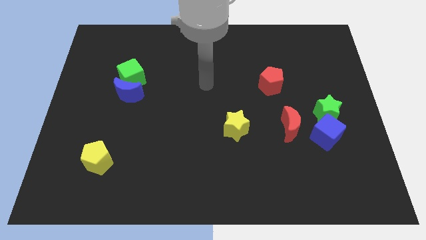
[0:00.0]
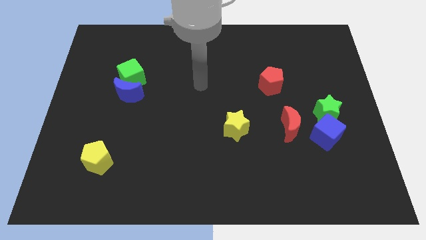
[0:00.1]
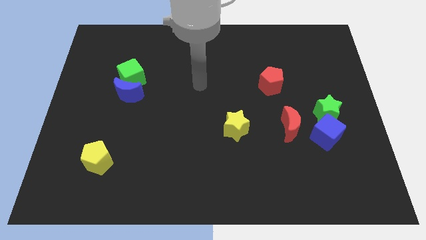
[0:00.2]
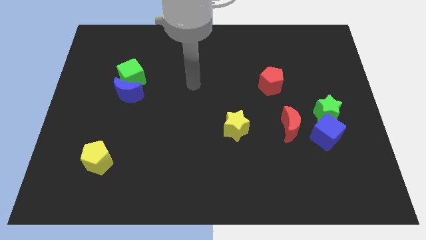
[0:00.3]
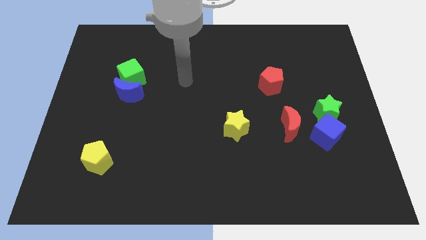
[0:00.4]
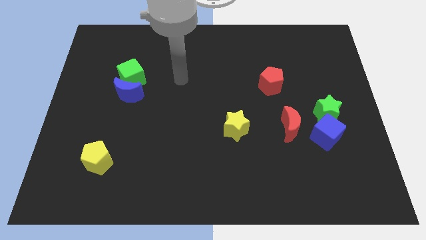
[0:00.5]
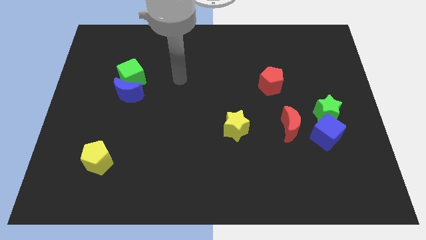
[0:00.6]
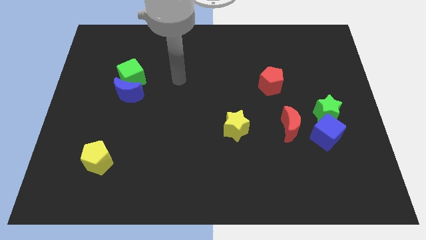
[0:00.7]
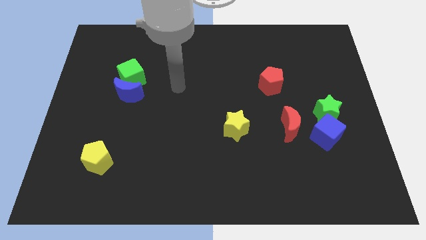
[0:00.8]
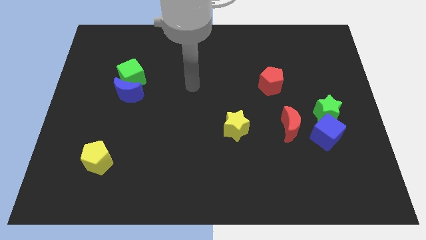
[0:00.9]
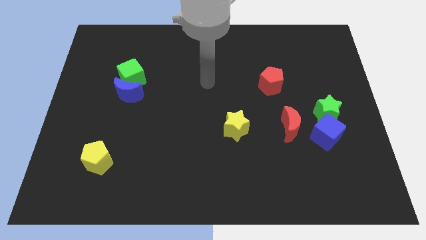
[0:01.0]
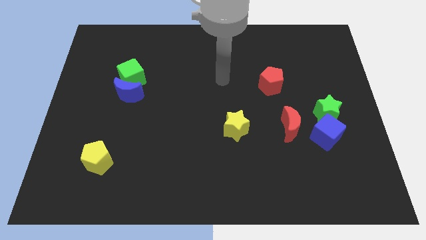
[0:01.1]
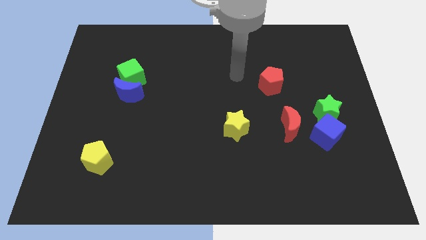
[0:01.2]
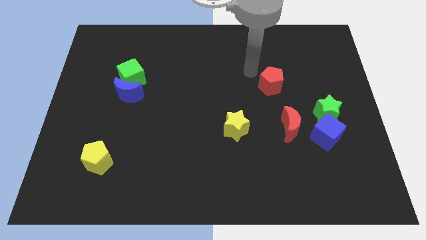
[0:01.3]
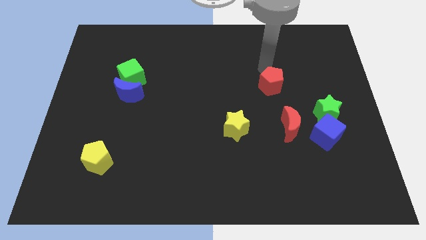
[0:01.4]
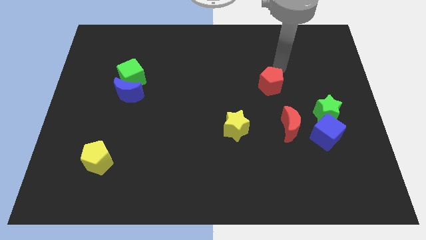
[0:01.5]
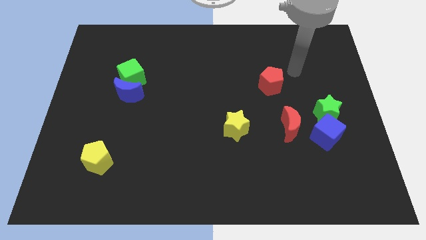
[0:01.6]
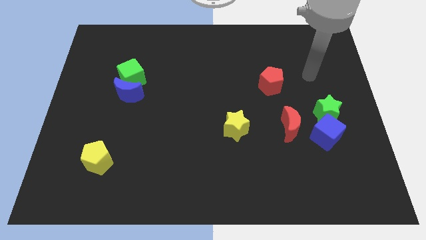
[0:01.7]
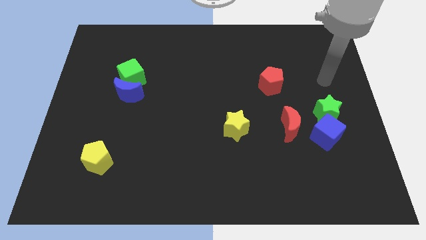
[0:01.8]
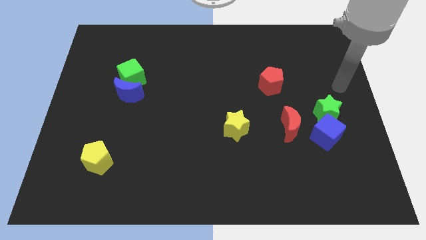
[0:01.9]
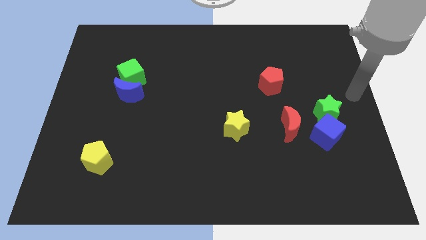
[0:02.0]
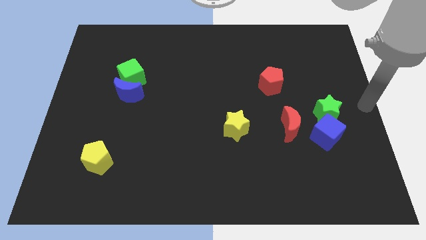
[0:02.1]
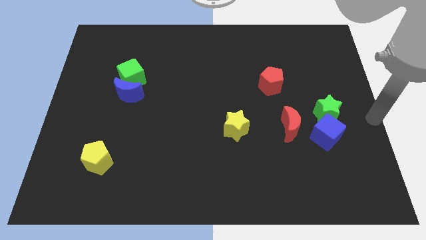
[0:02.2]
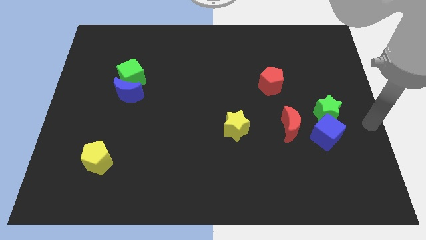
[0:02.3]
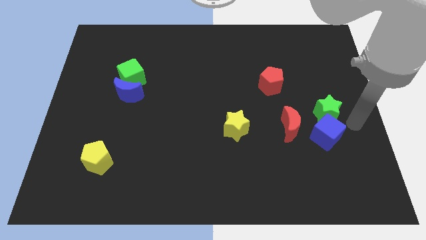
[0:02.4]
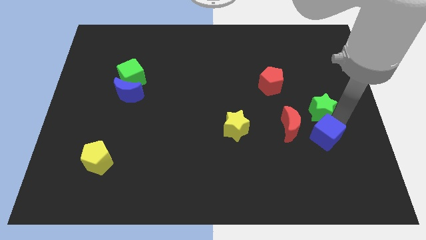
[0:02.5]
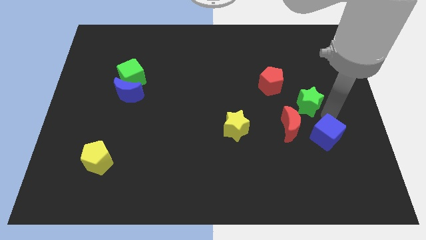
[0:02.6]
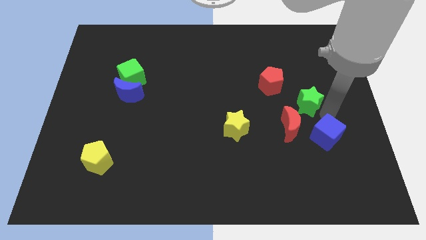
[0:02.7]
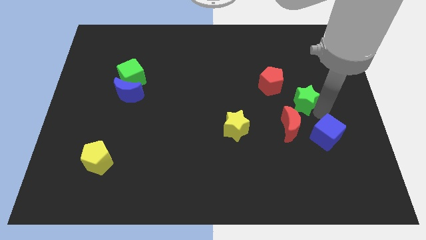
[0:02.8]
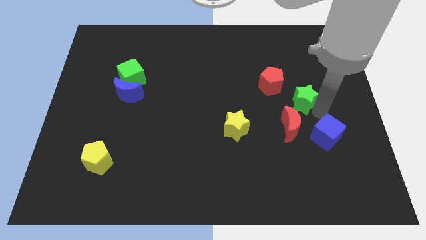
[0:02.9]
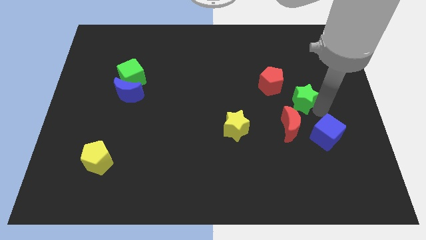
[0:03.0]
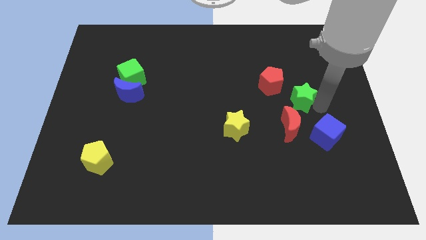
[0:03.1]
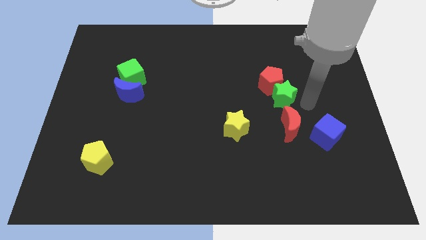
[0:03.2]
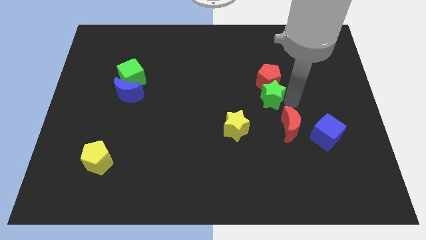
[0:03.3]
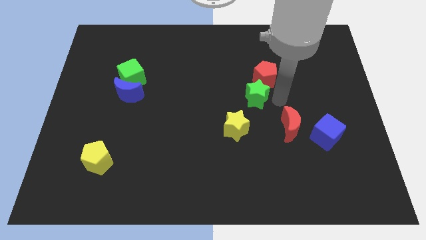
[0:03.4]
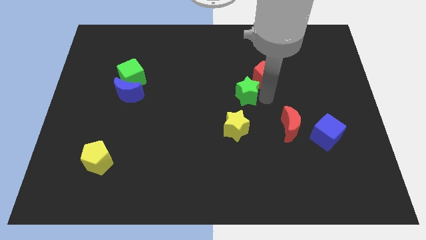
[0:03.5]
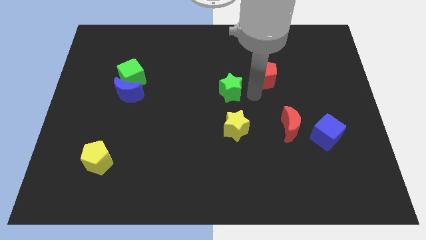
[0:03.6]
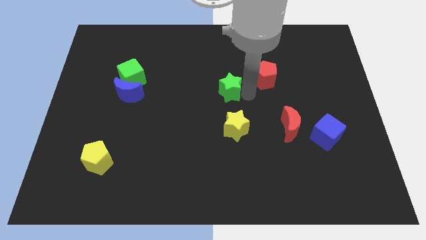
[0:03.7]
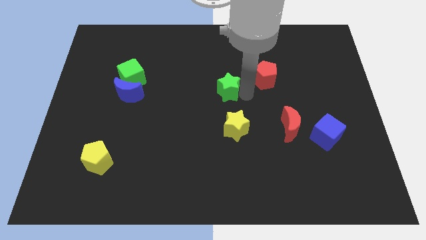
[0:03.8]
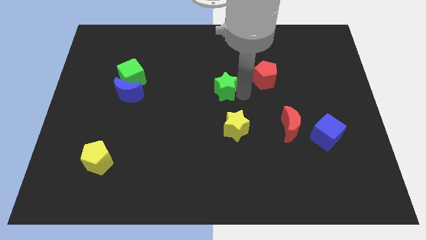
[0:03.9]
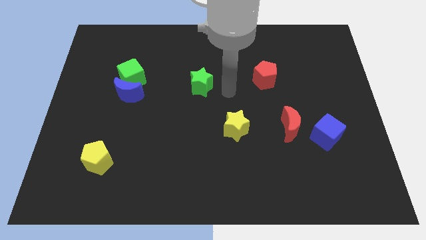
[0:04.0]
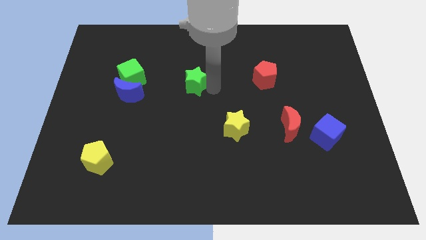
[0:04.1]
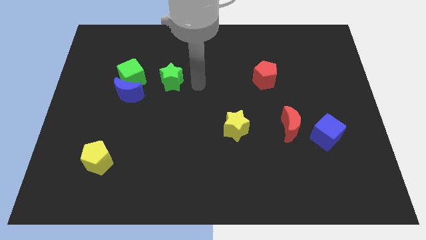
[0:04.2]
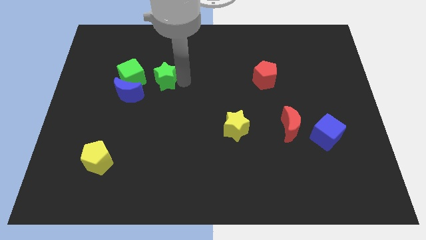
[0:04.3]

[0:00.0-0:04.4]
push the green star to the left side of the board

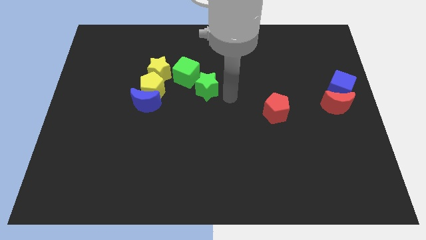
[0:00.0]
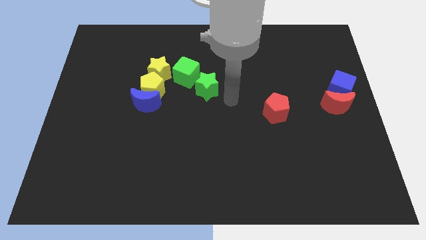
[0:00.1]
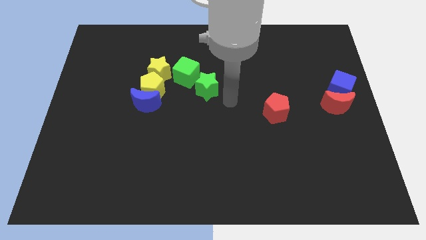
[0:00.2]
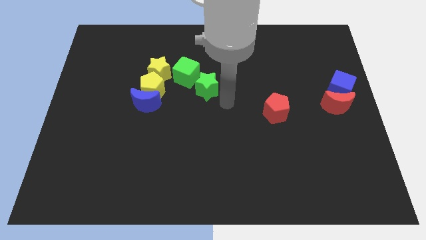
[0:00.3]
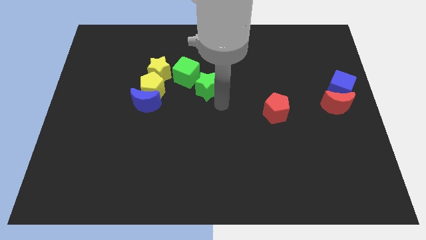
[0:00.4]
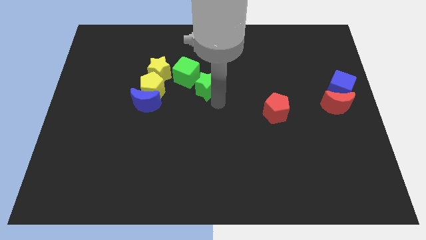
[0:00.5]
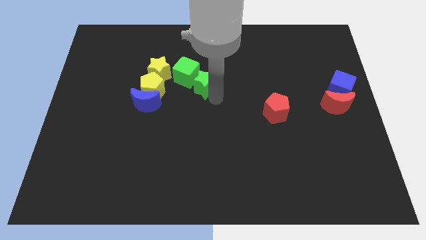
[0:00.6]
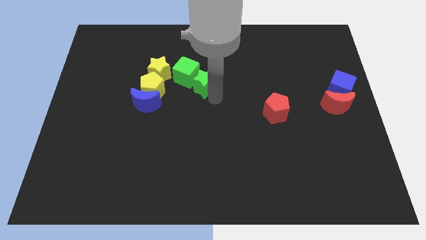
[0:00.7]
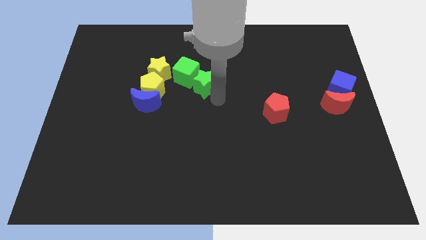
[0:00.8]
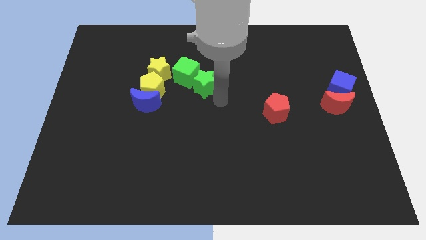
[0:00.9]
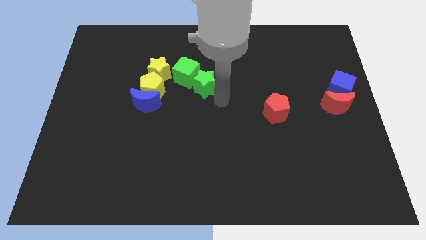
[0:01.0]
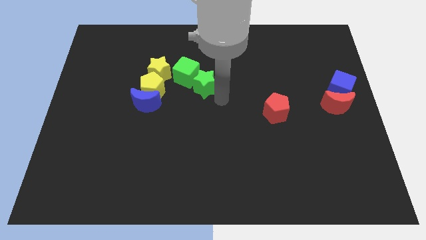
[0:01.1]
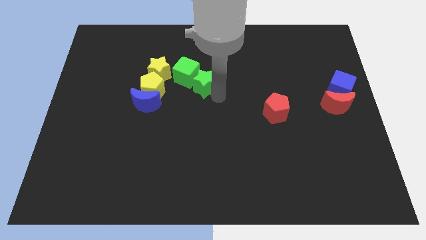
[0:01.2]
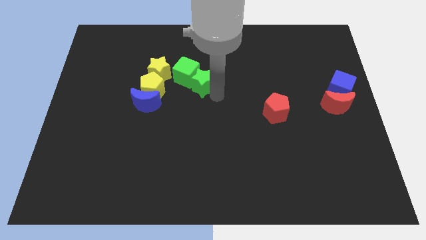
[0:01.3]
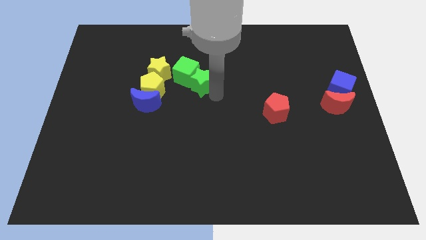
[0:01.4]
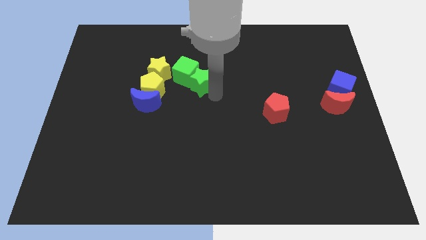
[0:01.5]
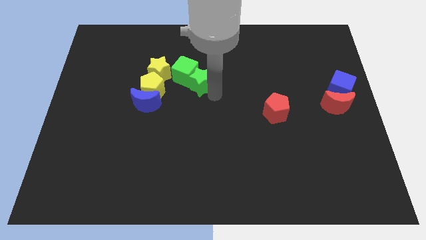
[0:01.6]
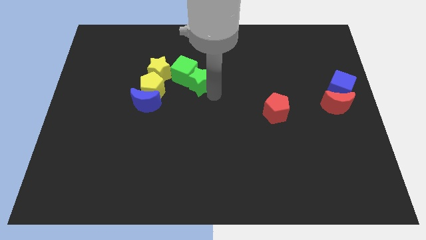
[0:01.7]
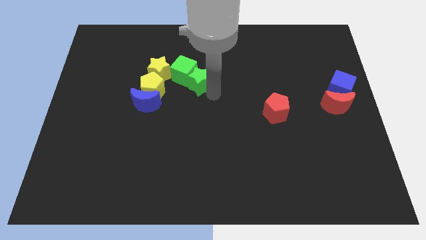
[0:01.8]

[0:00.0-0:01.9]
push the green star into green cube

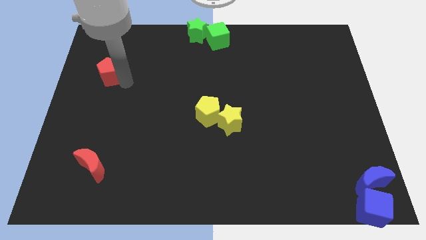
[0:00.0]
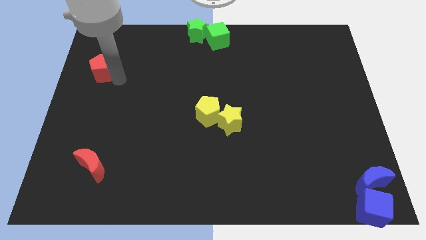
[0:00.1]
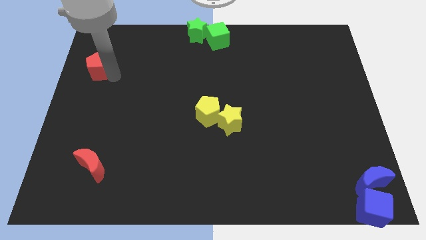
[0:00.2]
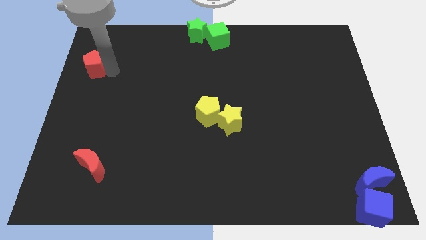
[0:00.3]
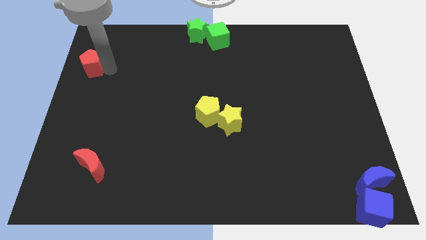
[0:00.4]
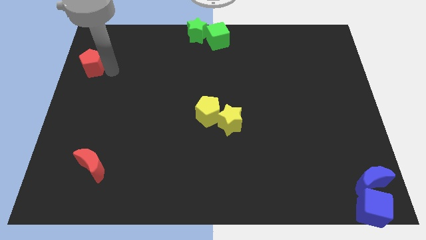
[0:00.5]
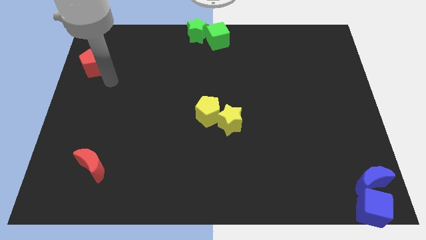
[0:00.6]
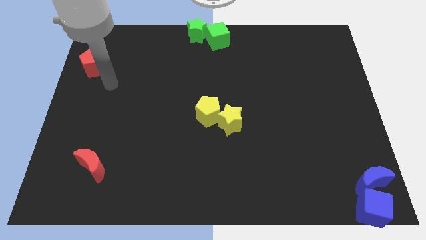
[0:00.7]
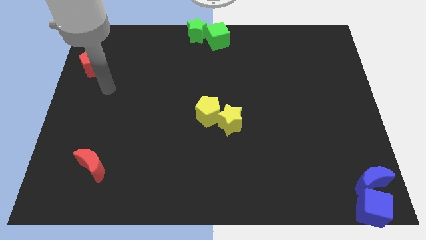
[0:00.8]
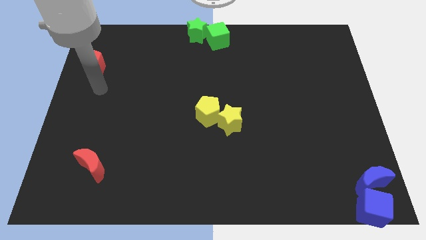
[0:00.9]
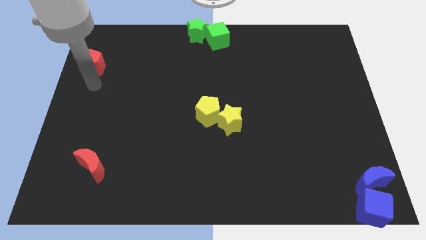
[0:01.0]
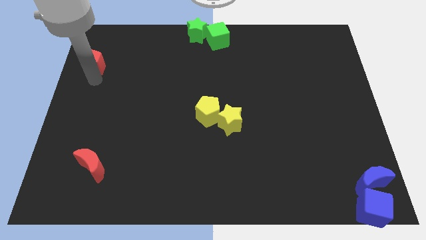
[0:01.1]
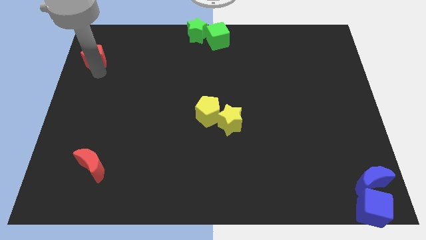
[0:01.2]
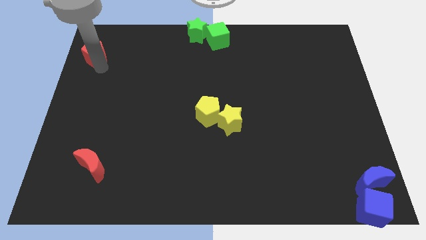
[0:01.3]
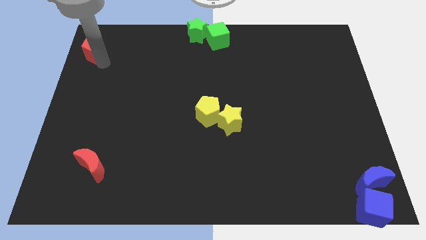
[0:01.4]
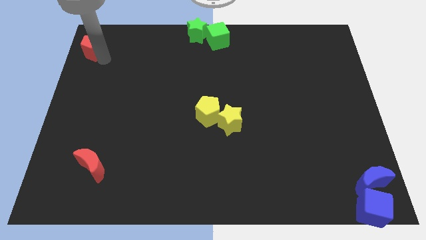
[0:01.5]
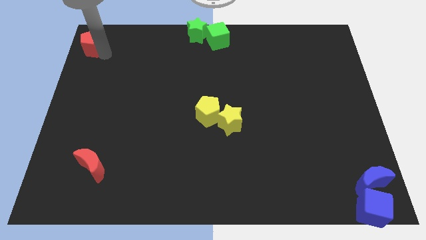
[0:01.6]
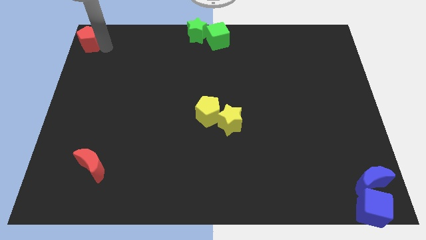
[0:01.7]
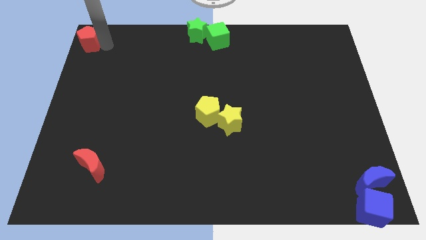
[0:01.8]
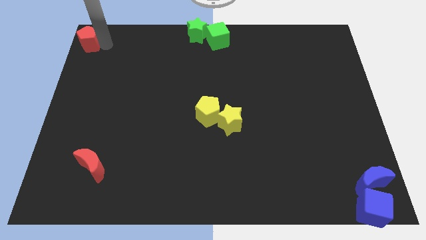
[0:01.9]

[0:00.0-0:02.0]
push the red pentagon to the top left to the board

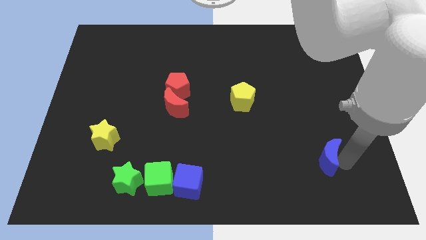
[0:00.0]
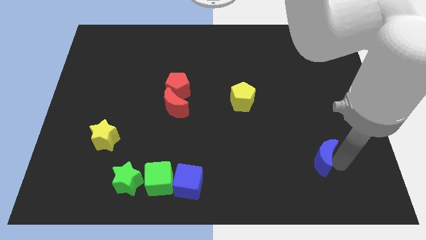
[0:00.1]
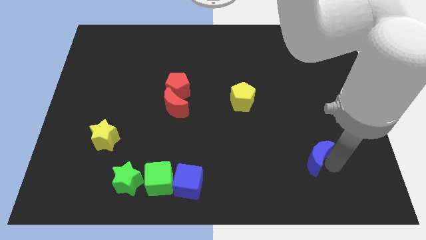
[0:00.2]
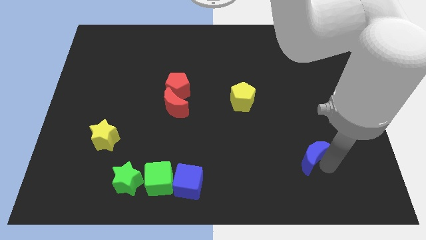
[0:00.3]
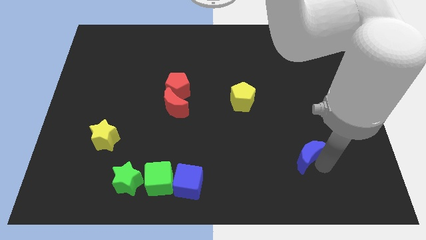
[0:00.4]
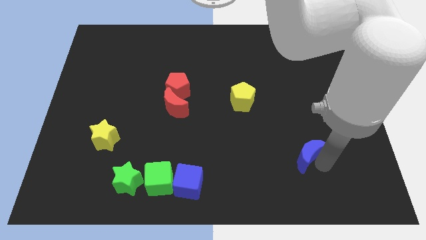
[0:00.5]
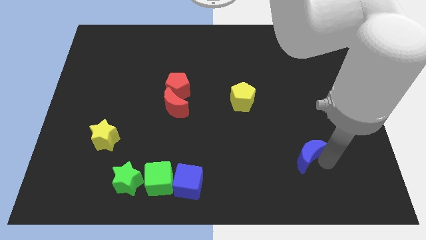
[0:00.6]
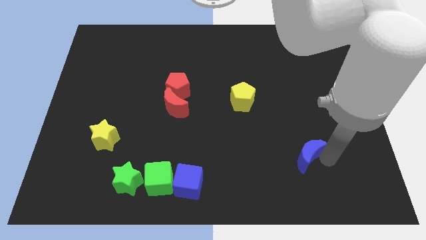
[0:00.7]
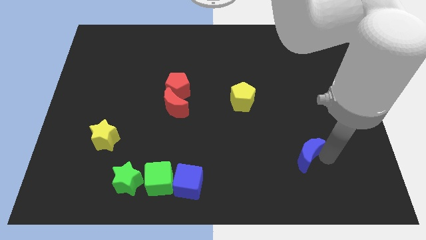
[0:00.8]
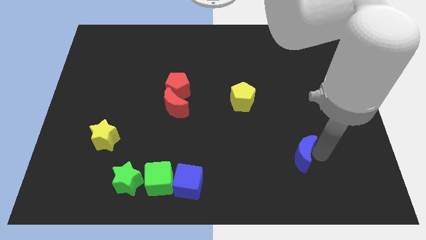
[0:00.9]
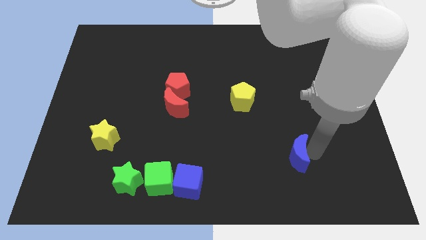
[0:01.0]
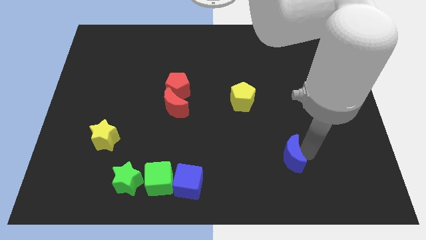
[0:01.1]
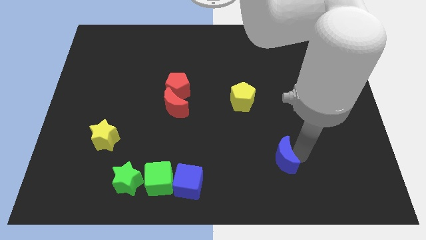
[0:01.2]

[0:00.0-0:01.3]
place the blue moon diagonally bottom right to yellow pentagon
